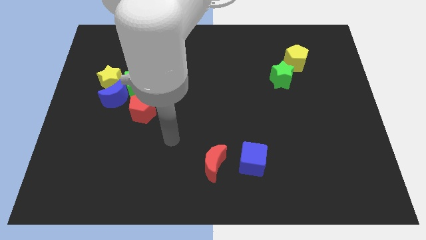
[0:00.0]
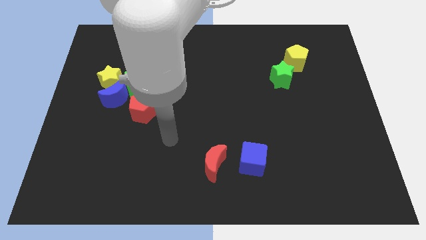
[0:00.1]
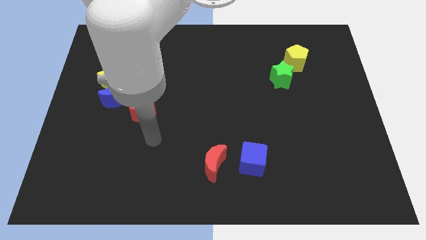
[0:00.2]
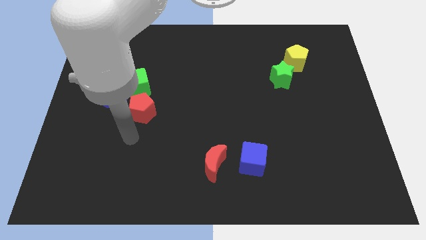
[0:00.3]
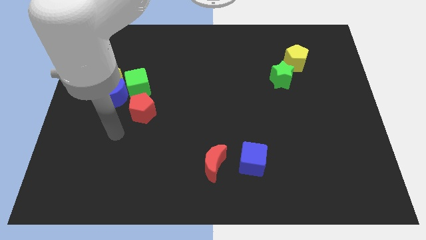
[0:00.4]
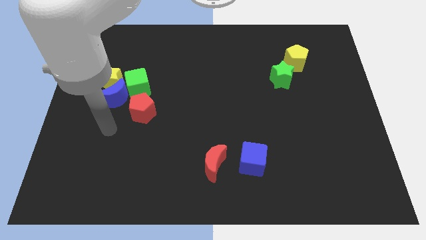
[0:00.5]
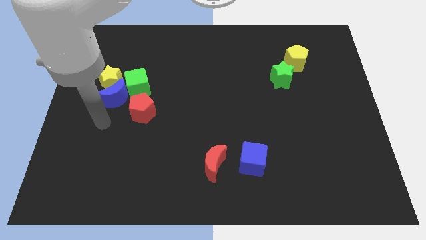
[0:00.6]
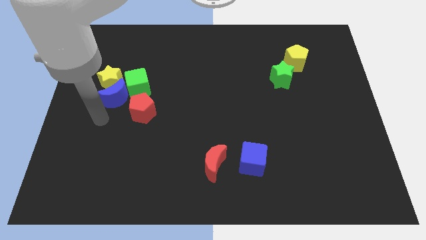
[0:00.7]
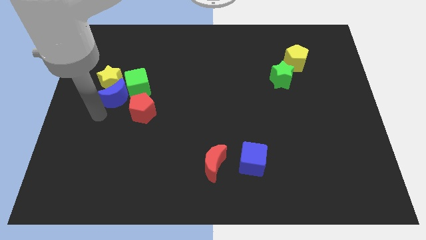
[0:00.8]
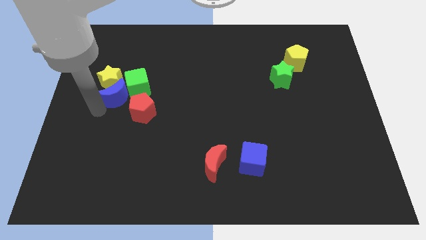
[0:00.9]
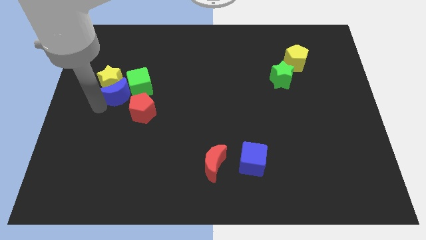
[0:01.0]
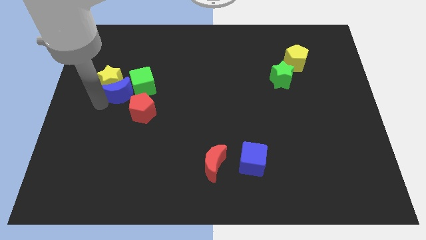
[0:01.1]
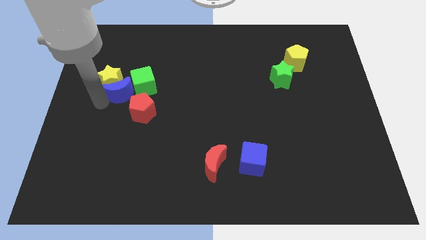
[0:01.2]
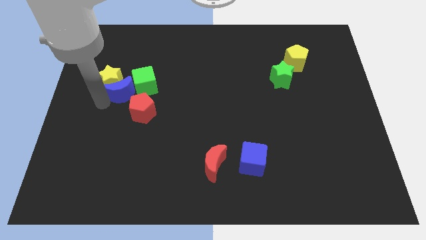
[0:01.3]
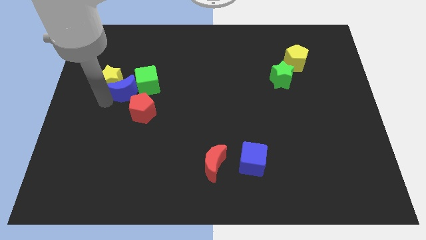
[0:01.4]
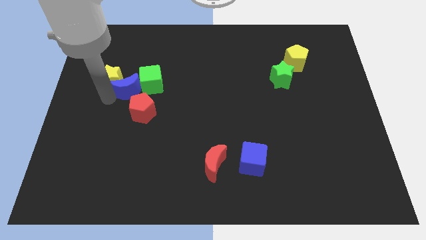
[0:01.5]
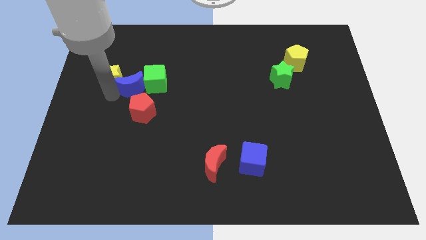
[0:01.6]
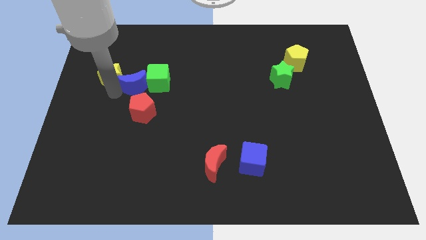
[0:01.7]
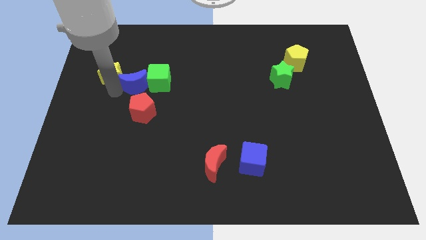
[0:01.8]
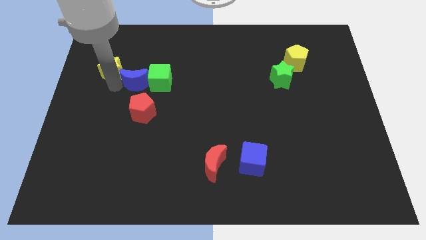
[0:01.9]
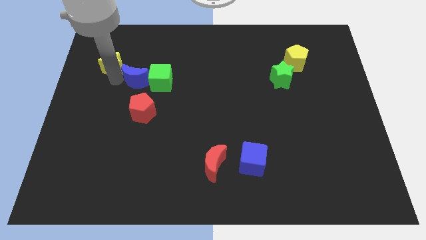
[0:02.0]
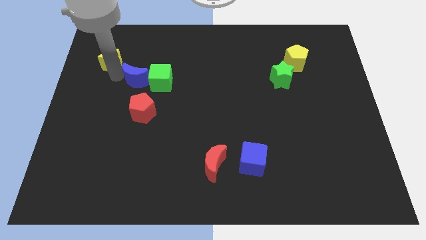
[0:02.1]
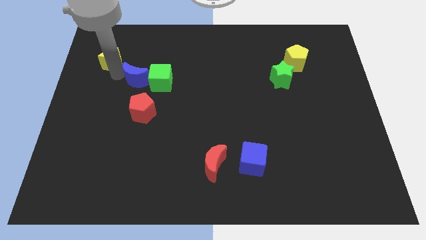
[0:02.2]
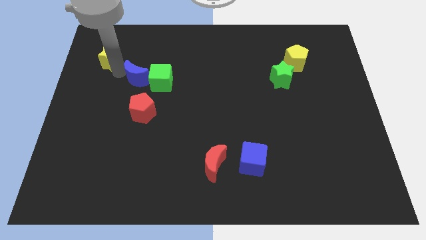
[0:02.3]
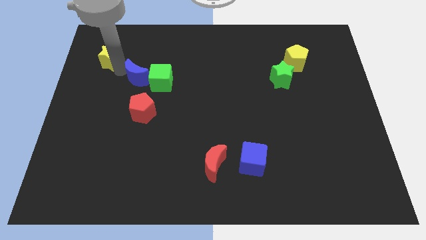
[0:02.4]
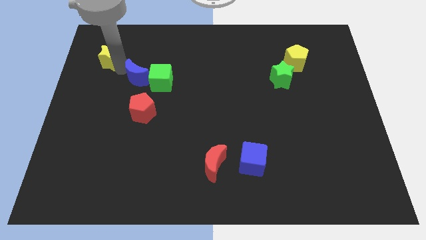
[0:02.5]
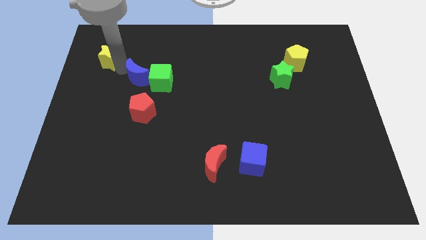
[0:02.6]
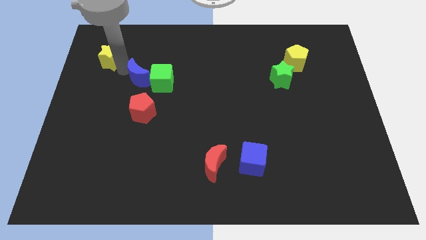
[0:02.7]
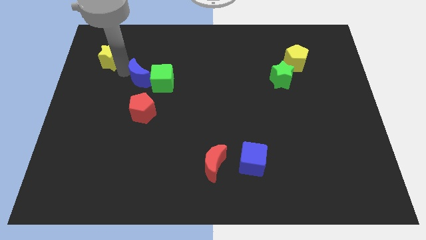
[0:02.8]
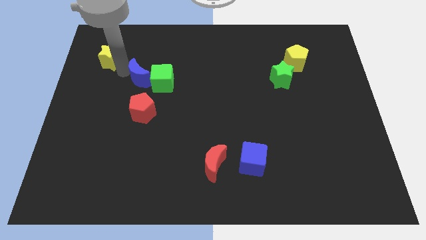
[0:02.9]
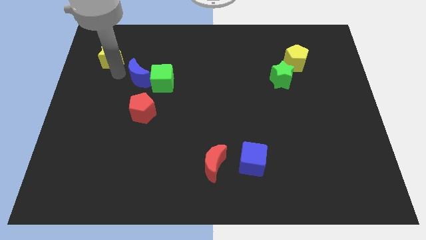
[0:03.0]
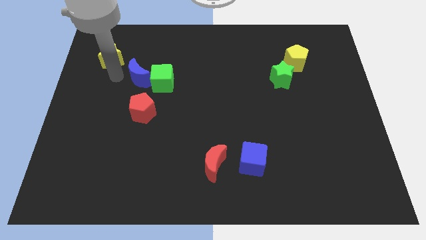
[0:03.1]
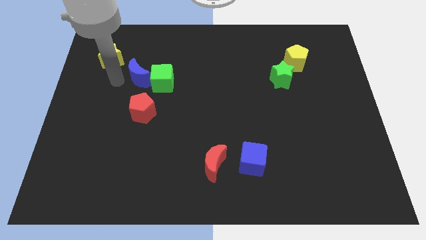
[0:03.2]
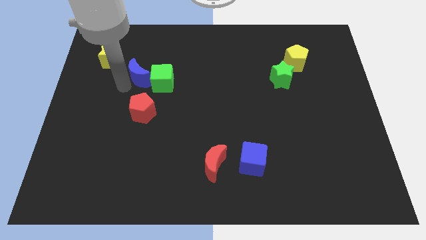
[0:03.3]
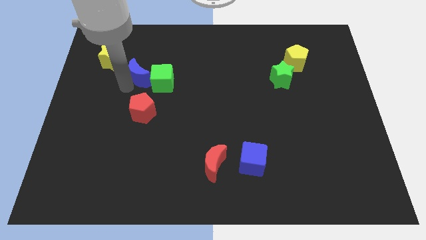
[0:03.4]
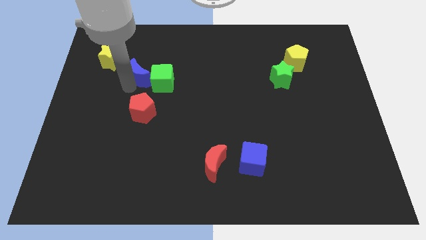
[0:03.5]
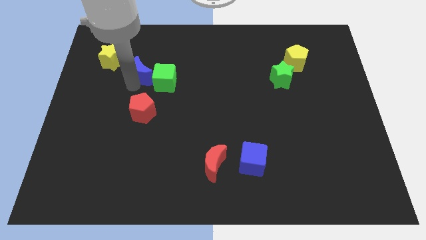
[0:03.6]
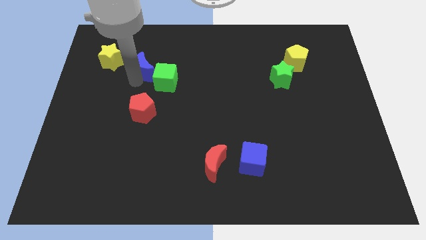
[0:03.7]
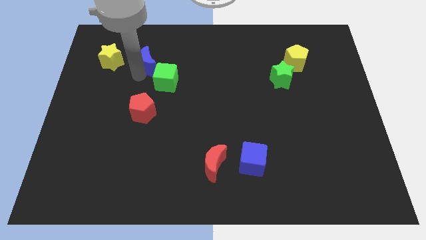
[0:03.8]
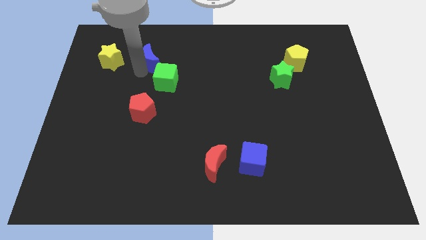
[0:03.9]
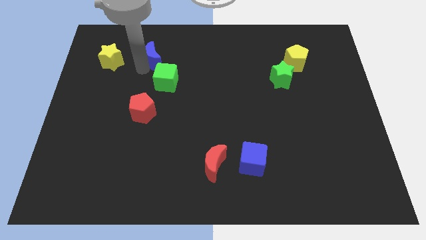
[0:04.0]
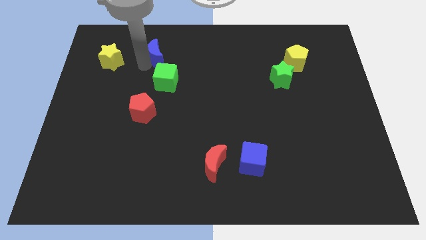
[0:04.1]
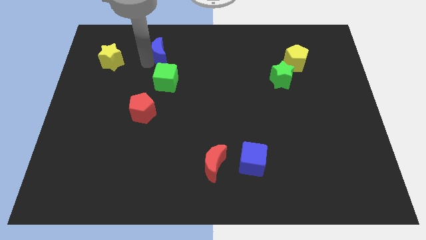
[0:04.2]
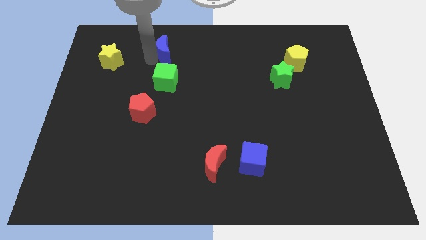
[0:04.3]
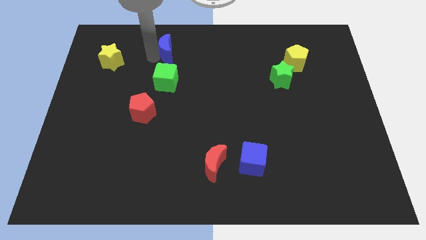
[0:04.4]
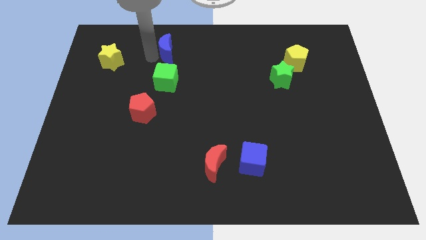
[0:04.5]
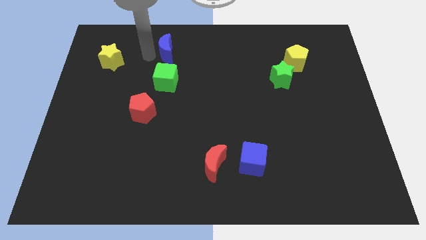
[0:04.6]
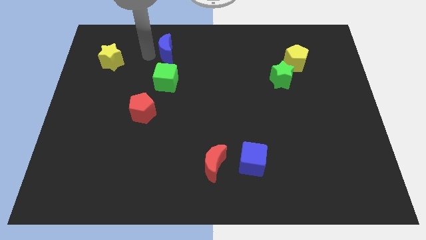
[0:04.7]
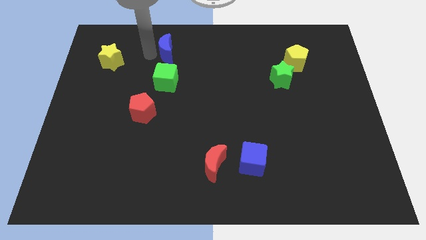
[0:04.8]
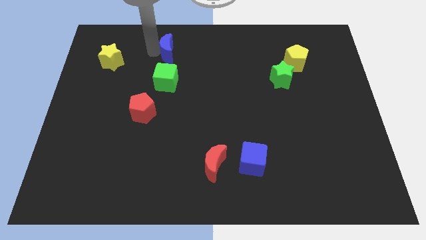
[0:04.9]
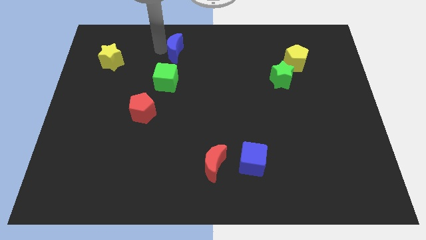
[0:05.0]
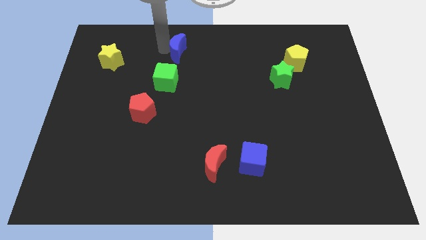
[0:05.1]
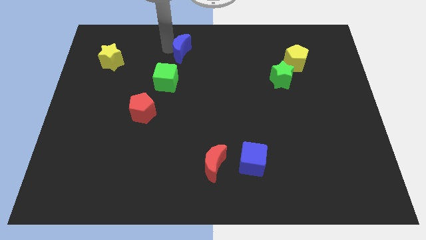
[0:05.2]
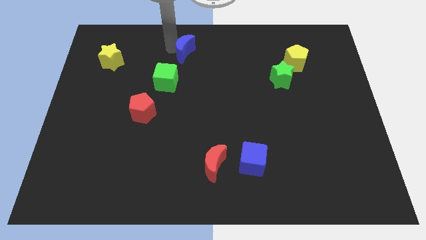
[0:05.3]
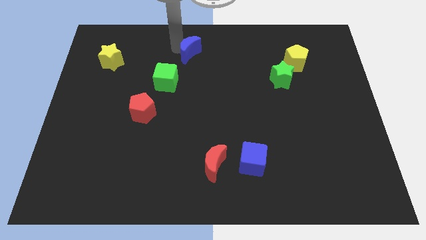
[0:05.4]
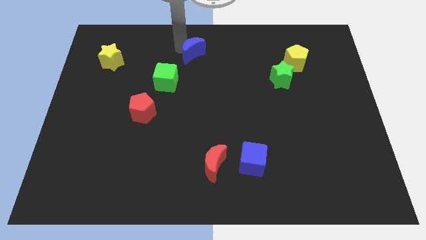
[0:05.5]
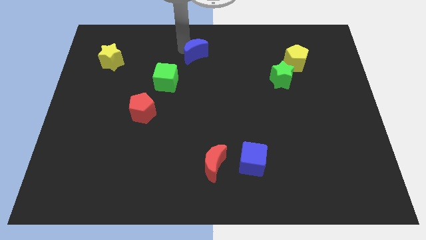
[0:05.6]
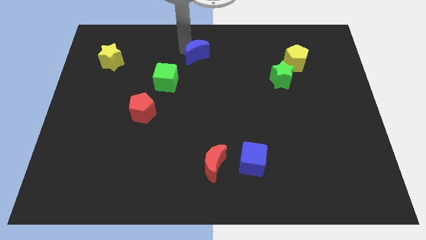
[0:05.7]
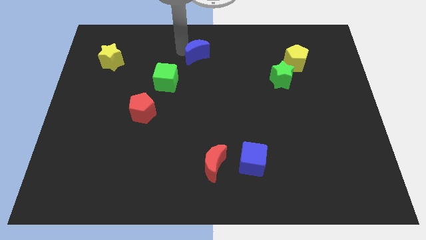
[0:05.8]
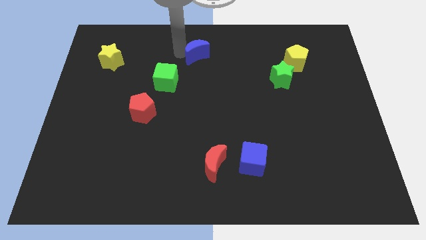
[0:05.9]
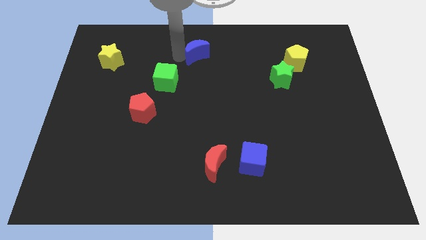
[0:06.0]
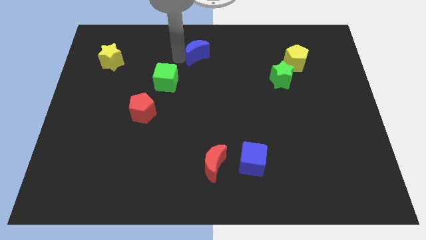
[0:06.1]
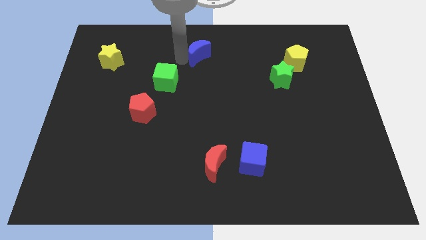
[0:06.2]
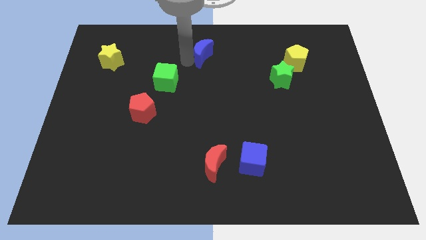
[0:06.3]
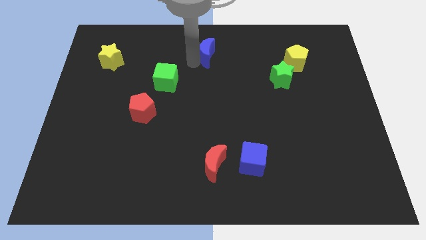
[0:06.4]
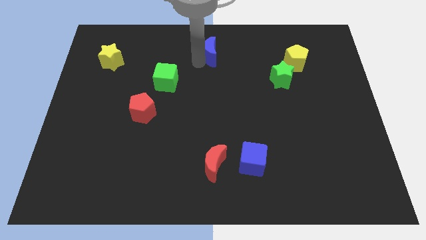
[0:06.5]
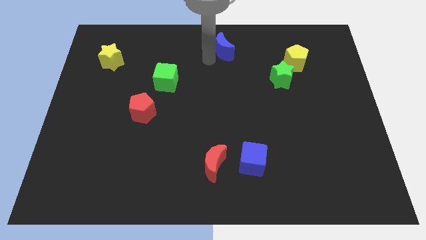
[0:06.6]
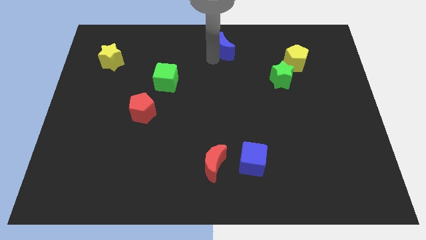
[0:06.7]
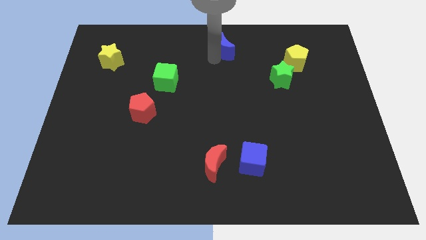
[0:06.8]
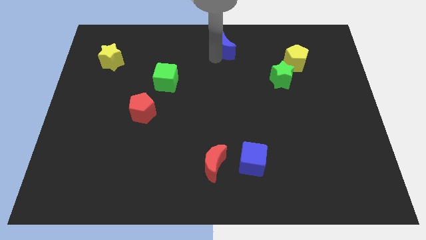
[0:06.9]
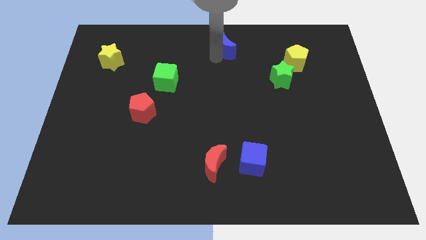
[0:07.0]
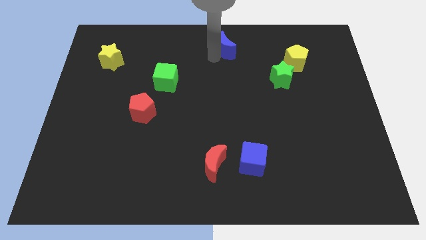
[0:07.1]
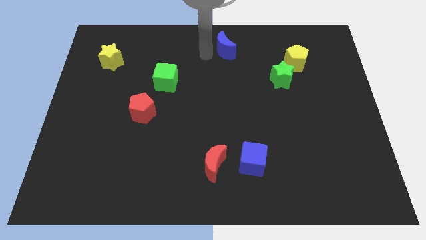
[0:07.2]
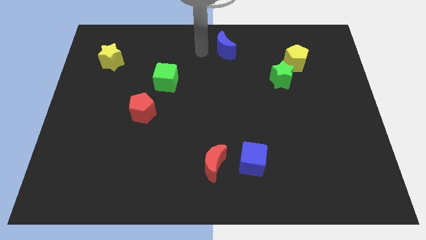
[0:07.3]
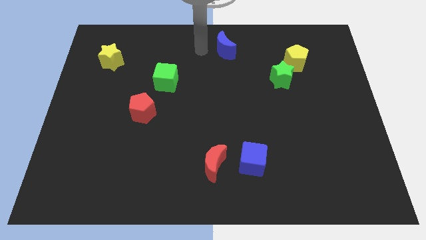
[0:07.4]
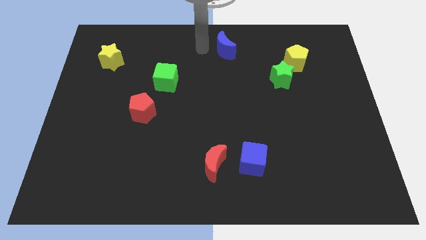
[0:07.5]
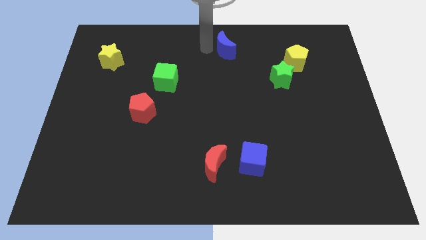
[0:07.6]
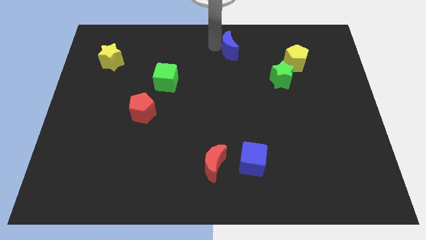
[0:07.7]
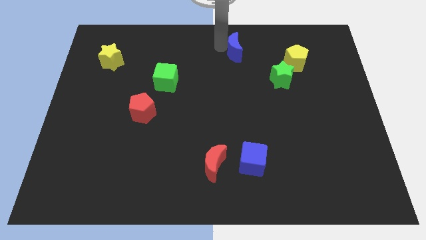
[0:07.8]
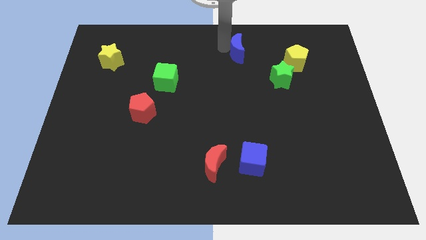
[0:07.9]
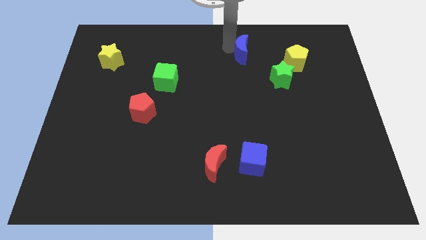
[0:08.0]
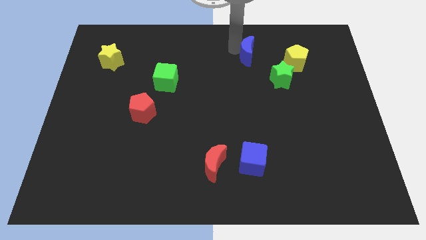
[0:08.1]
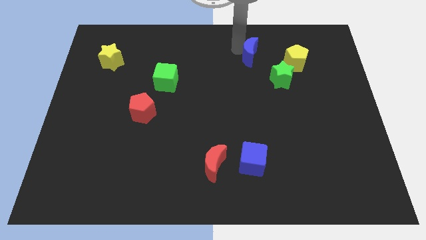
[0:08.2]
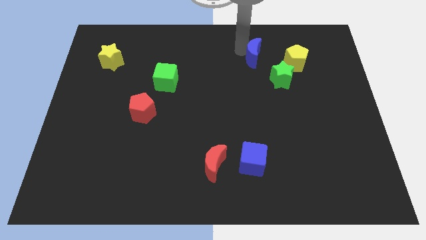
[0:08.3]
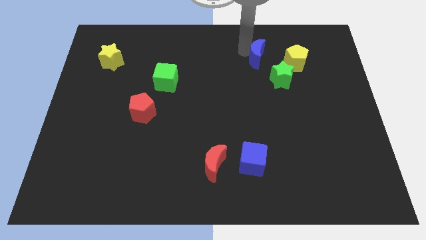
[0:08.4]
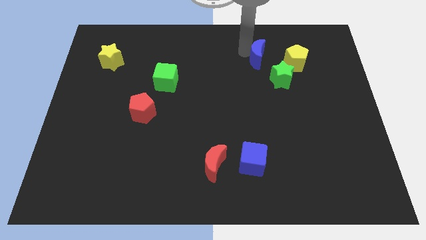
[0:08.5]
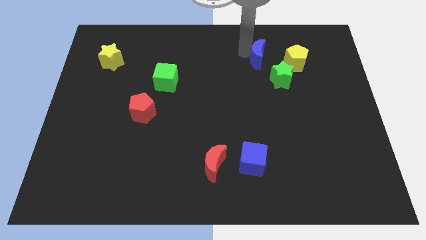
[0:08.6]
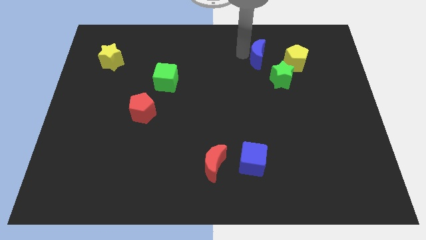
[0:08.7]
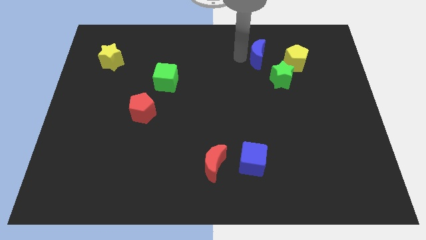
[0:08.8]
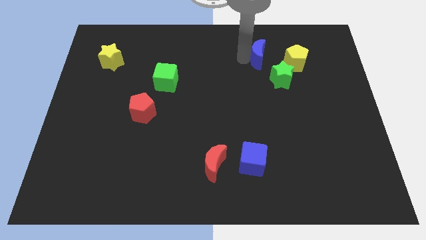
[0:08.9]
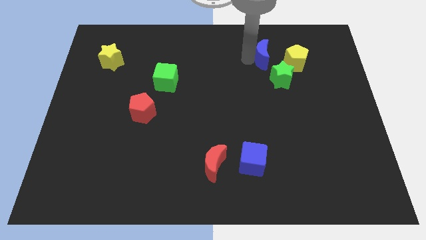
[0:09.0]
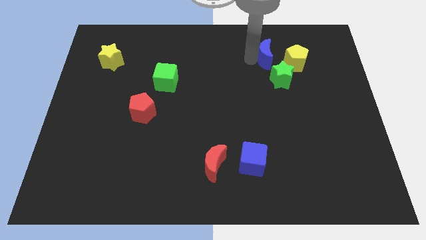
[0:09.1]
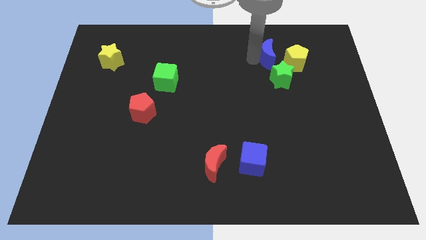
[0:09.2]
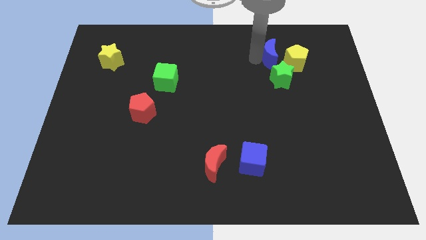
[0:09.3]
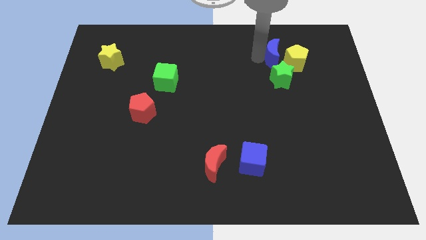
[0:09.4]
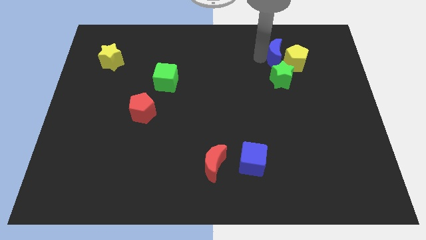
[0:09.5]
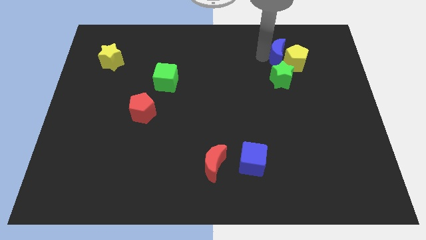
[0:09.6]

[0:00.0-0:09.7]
put the blue moon close to the yellow pentagon
